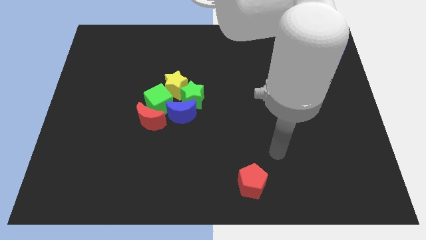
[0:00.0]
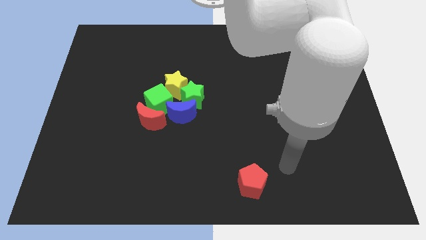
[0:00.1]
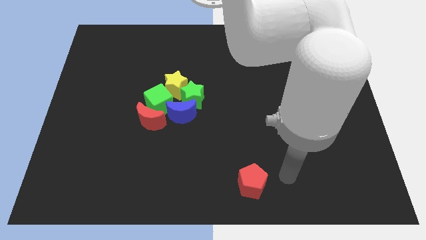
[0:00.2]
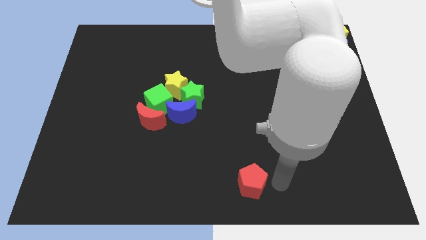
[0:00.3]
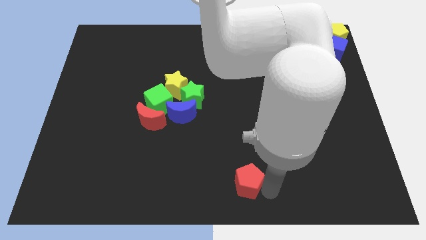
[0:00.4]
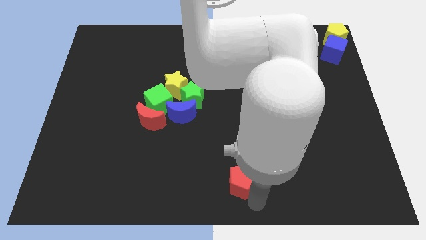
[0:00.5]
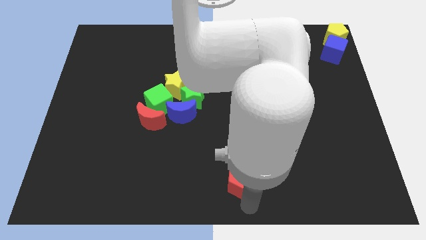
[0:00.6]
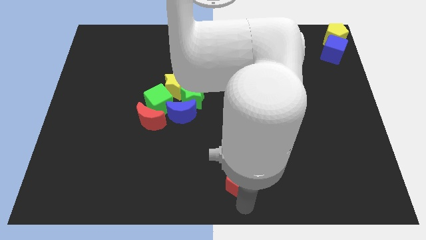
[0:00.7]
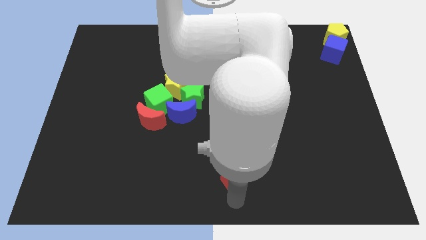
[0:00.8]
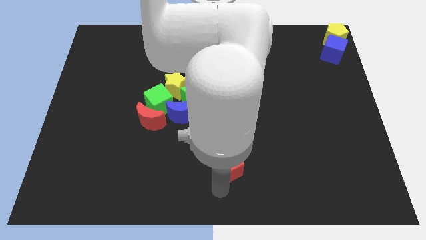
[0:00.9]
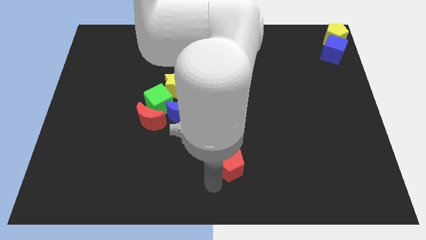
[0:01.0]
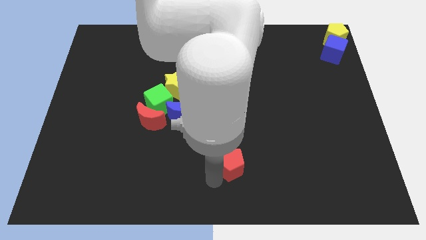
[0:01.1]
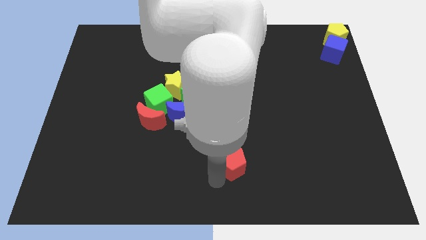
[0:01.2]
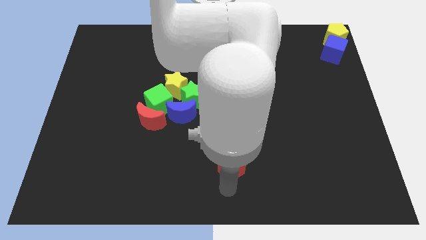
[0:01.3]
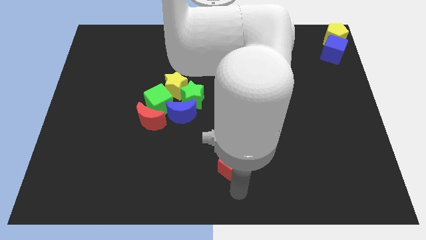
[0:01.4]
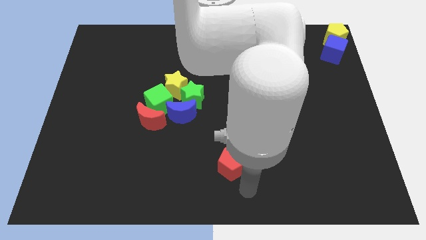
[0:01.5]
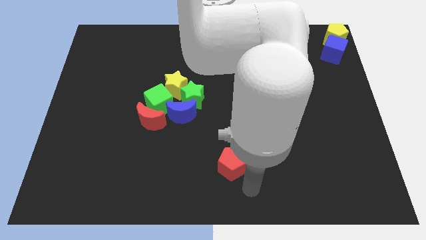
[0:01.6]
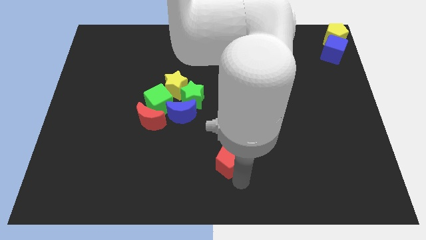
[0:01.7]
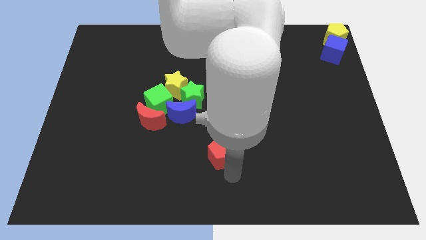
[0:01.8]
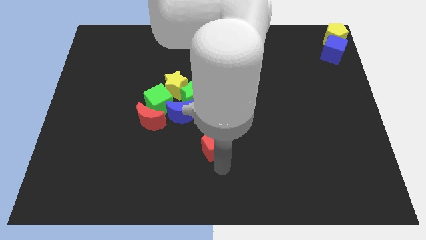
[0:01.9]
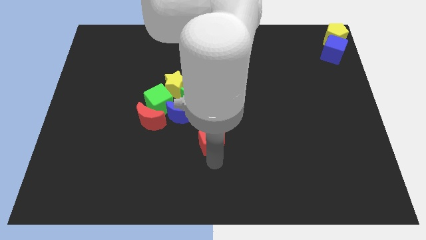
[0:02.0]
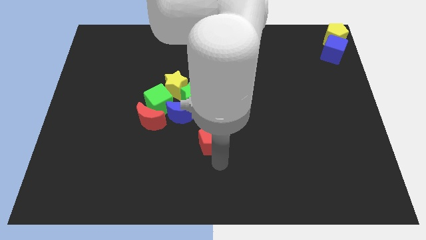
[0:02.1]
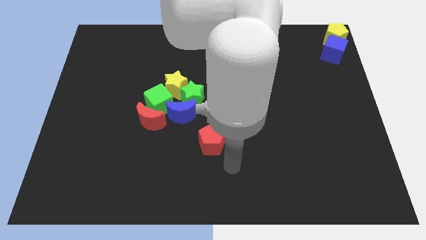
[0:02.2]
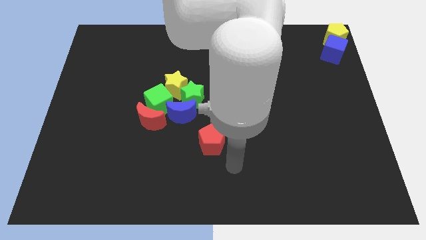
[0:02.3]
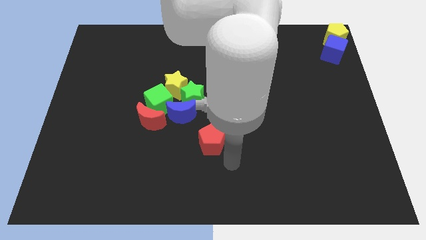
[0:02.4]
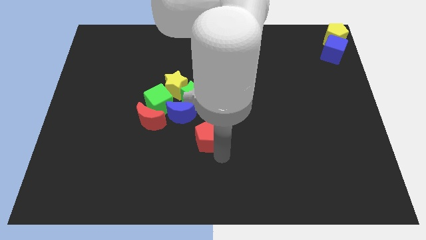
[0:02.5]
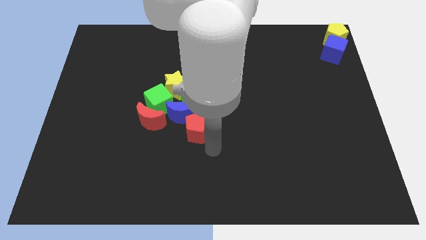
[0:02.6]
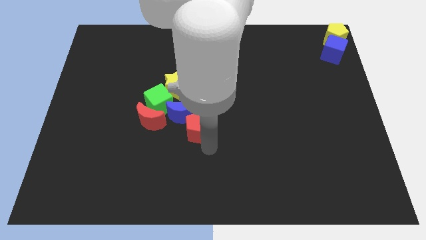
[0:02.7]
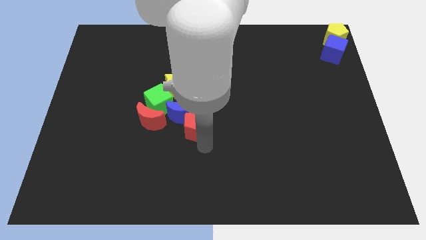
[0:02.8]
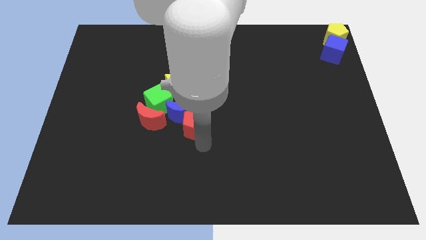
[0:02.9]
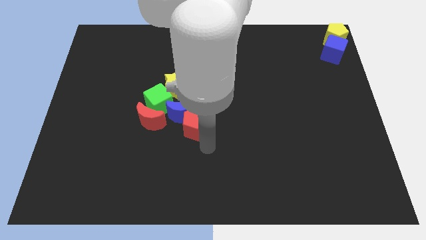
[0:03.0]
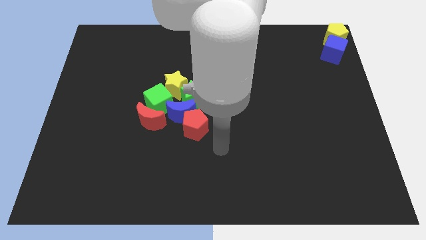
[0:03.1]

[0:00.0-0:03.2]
push the red pentagon to the bottom of the blue moon

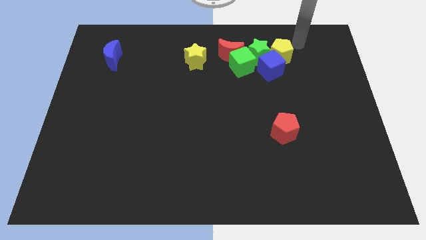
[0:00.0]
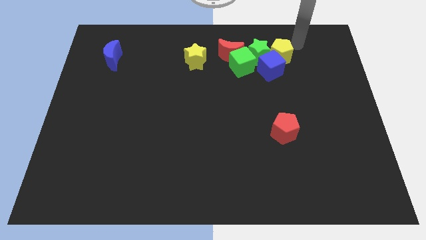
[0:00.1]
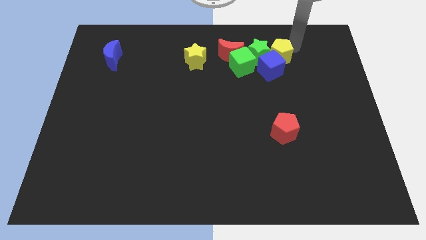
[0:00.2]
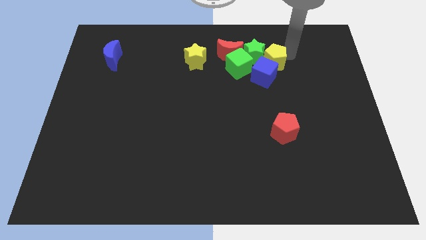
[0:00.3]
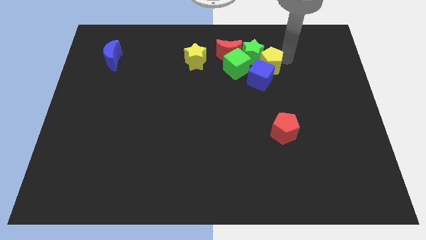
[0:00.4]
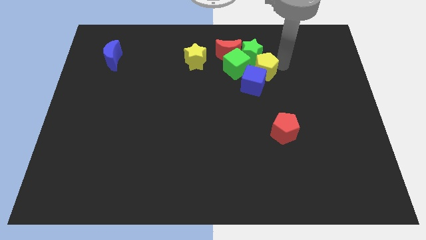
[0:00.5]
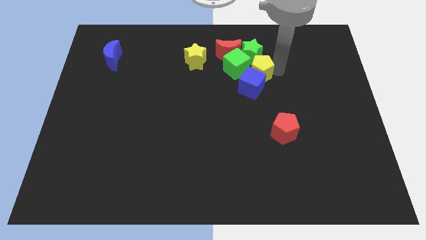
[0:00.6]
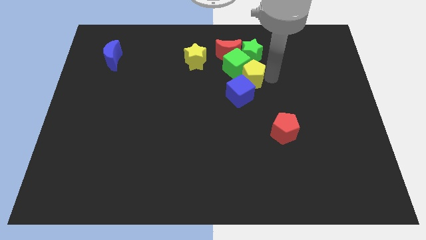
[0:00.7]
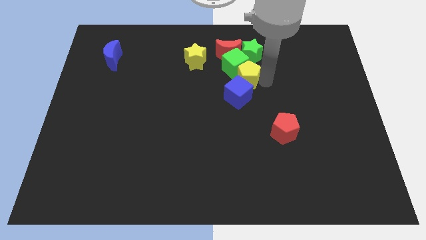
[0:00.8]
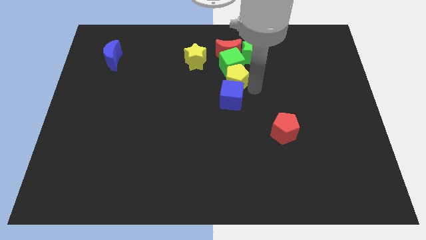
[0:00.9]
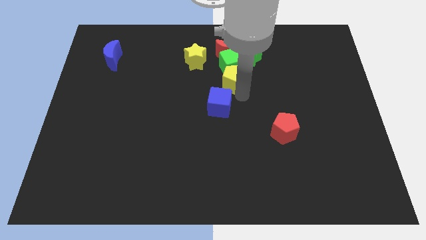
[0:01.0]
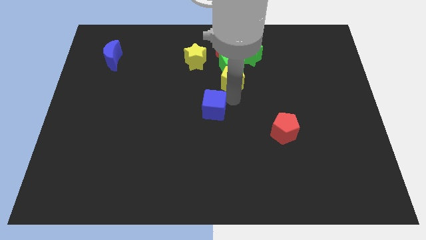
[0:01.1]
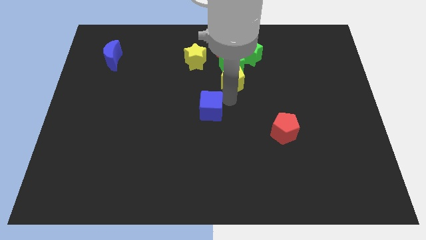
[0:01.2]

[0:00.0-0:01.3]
push the yellow pentagon and blue cube towards the center of the board

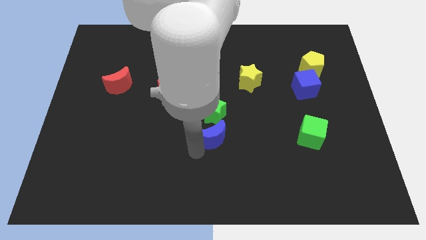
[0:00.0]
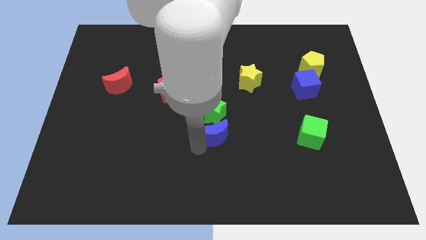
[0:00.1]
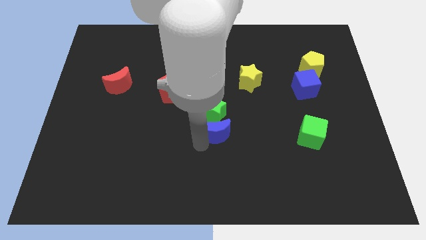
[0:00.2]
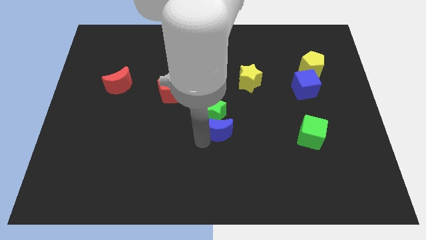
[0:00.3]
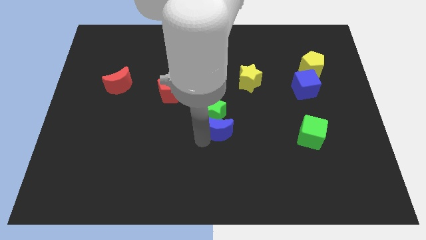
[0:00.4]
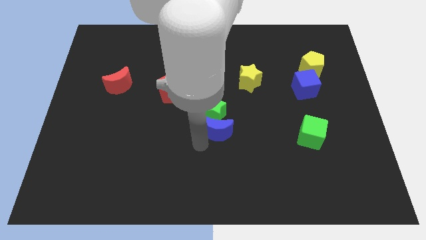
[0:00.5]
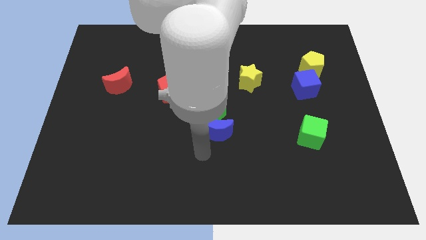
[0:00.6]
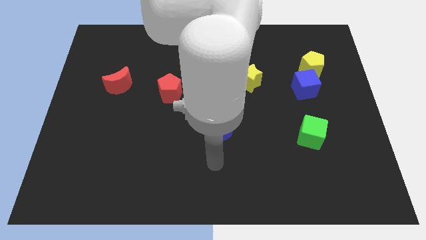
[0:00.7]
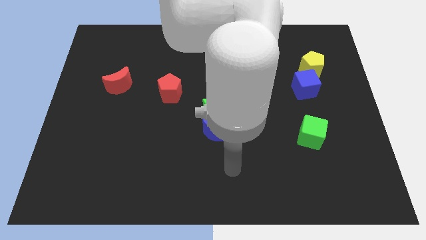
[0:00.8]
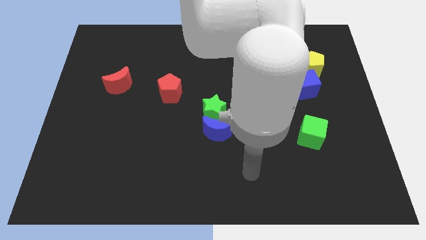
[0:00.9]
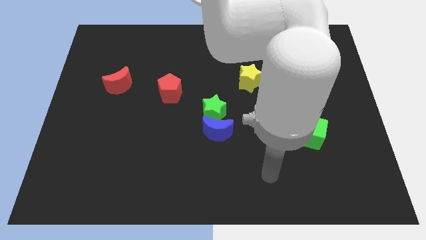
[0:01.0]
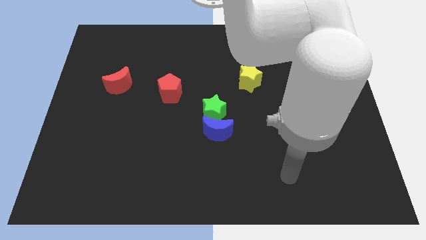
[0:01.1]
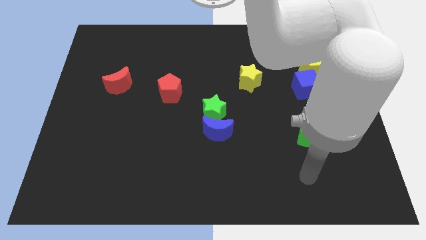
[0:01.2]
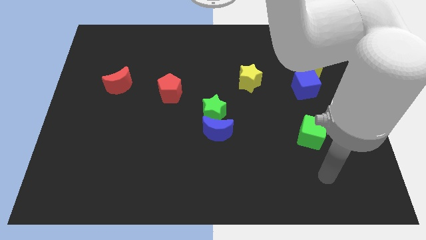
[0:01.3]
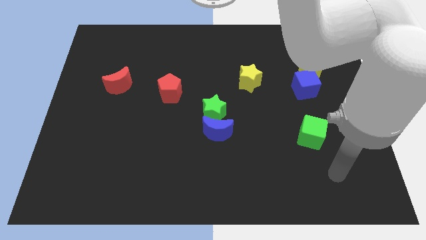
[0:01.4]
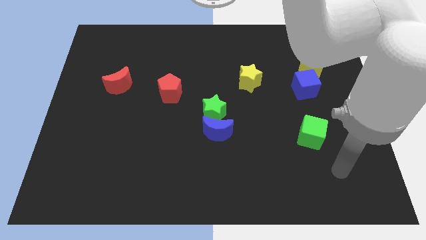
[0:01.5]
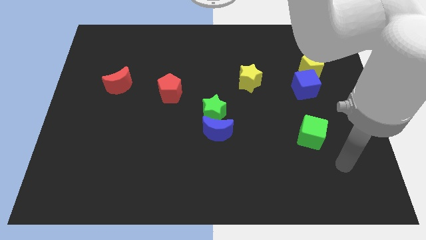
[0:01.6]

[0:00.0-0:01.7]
touch the blue moon

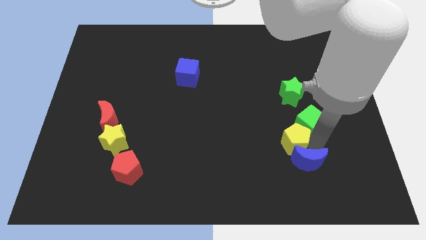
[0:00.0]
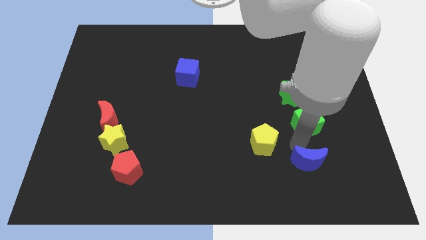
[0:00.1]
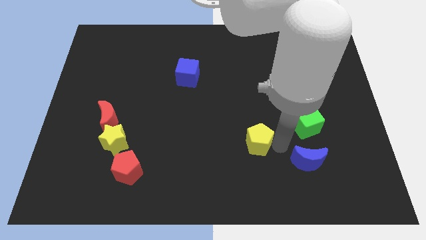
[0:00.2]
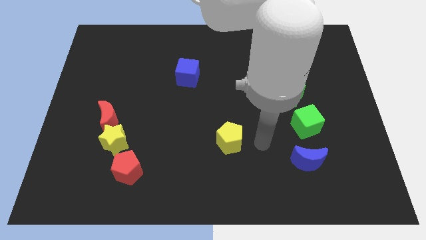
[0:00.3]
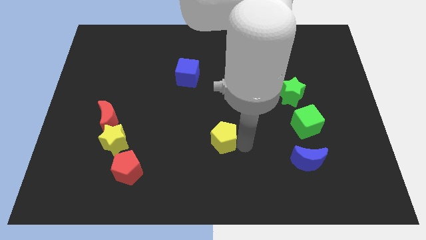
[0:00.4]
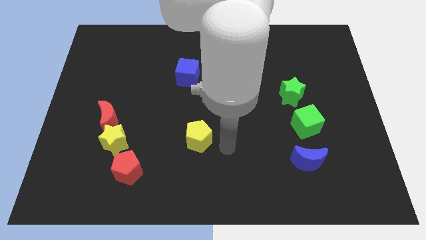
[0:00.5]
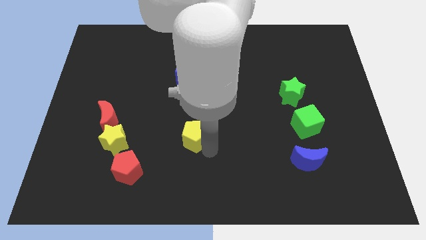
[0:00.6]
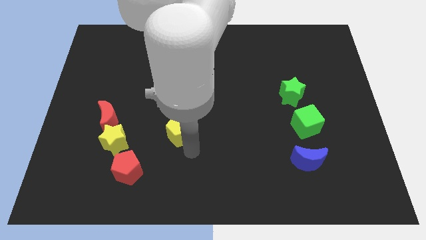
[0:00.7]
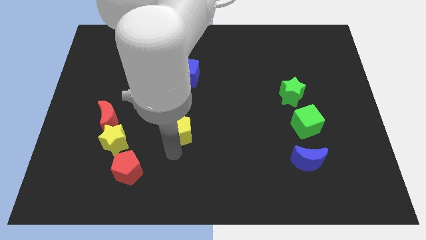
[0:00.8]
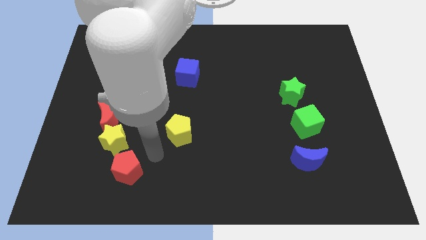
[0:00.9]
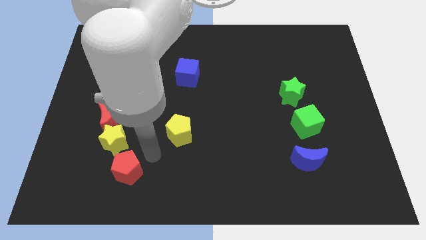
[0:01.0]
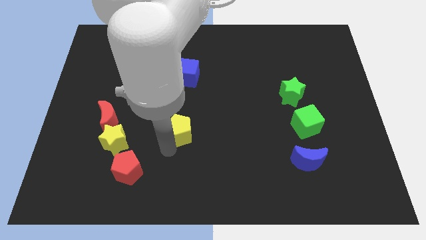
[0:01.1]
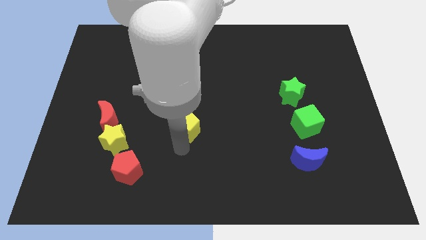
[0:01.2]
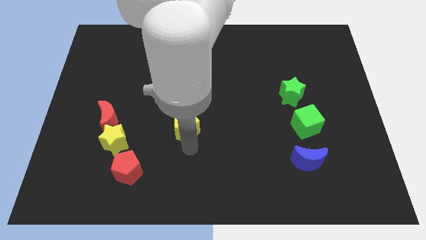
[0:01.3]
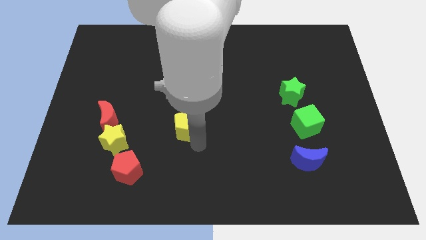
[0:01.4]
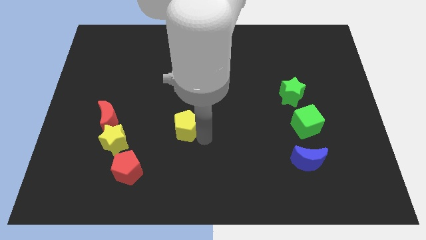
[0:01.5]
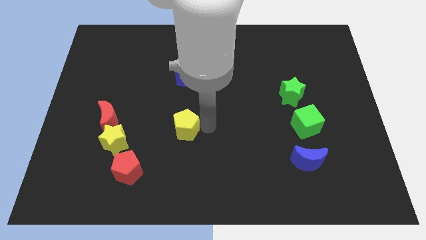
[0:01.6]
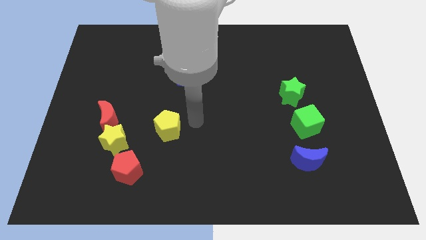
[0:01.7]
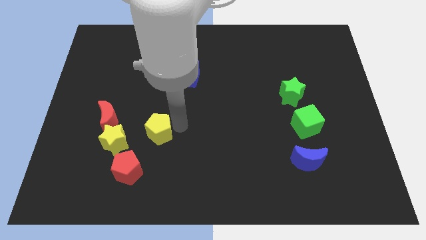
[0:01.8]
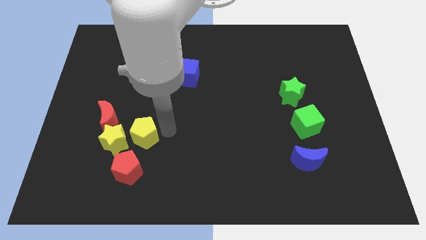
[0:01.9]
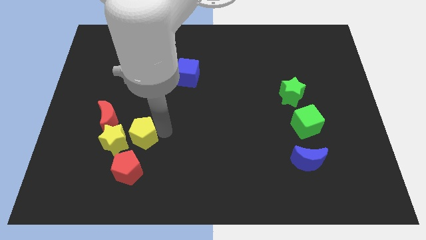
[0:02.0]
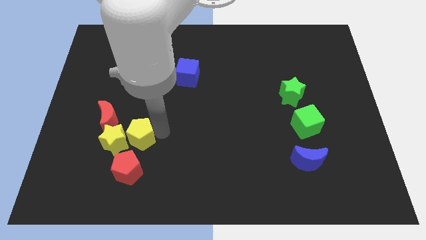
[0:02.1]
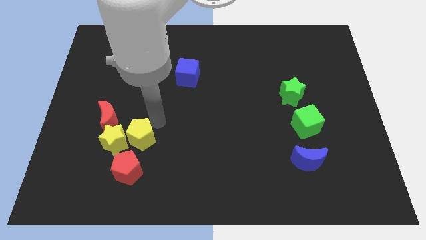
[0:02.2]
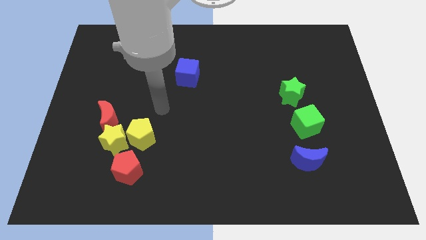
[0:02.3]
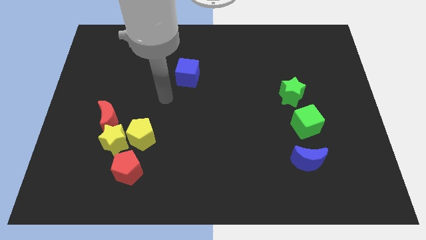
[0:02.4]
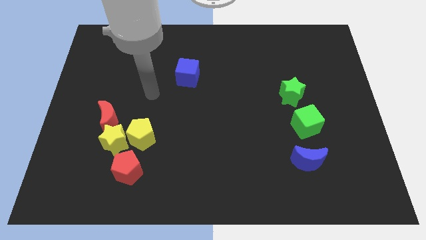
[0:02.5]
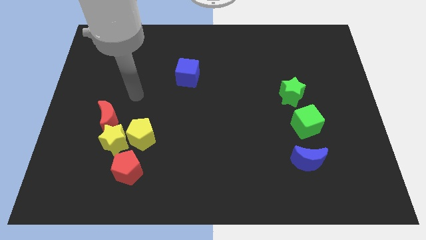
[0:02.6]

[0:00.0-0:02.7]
put the yellow pentagon right to the yellow star
